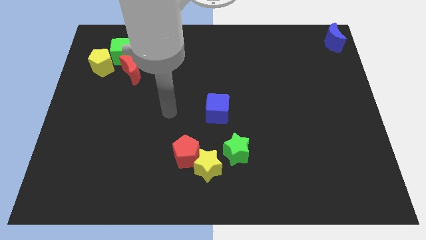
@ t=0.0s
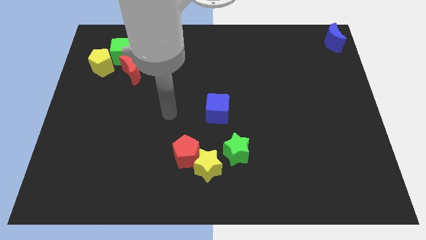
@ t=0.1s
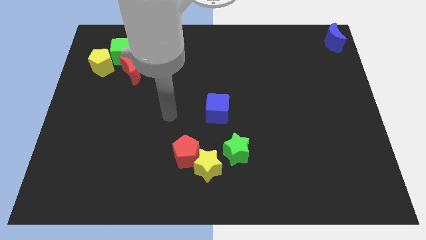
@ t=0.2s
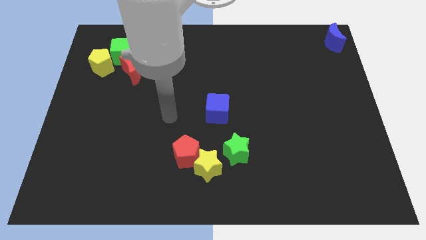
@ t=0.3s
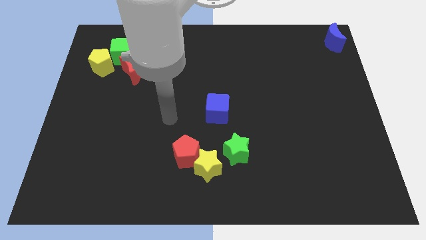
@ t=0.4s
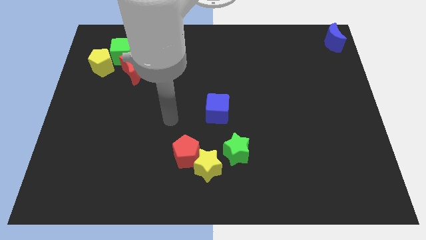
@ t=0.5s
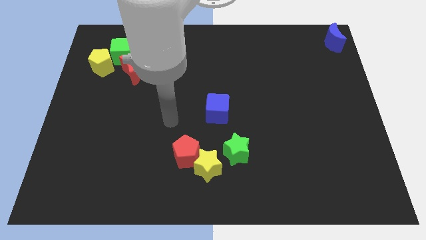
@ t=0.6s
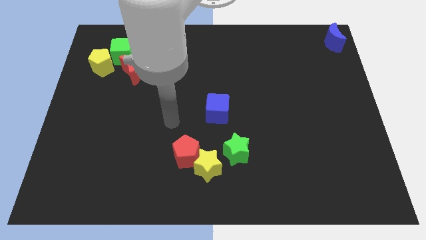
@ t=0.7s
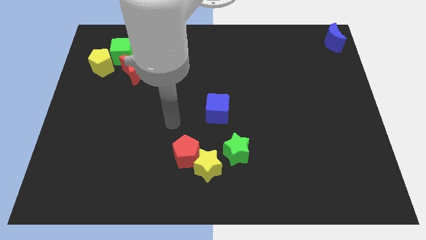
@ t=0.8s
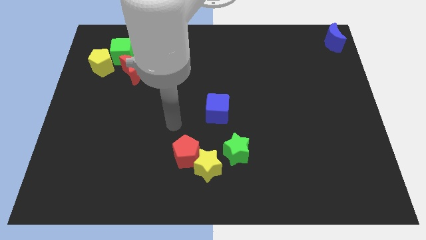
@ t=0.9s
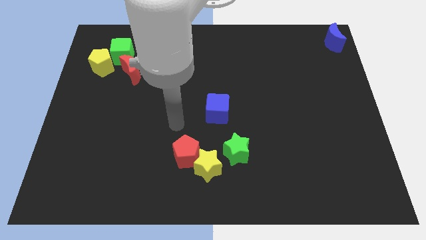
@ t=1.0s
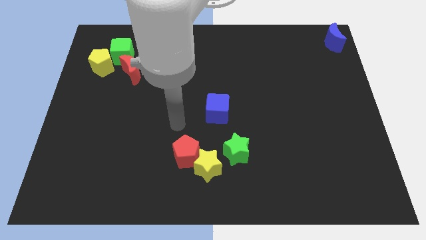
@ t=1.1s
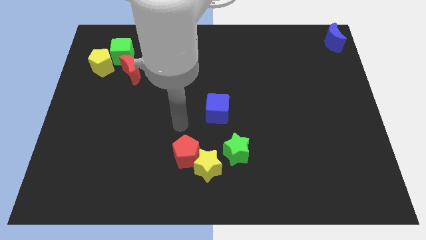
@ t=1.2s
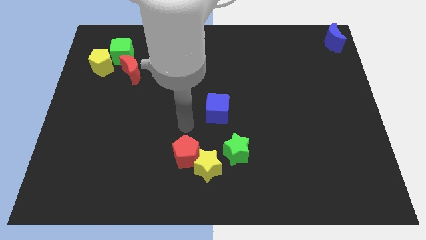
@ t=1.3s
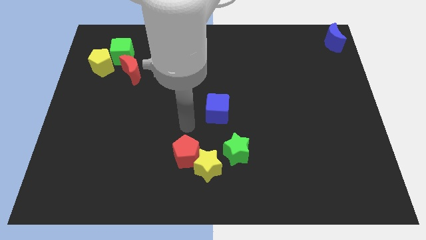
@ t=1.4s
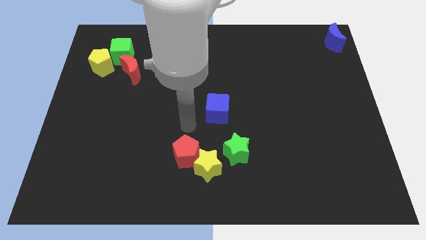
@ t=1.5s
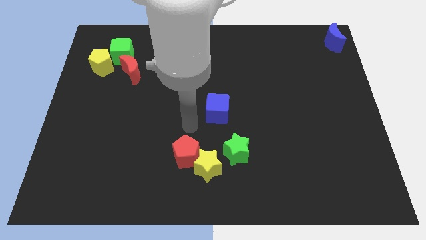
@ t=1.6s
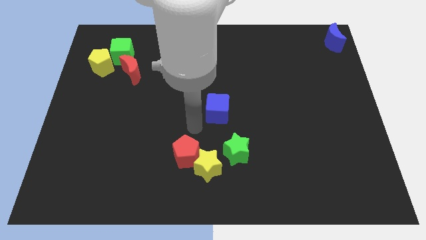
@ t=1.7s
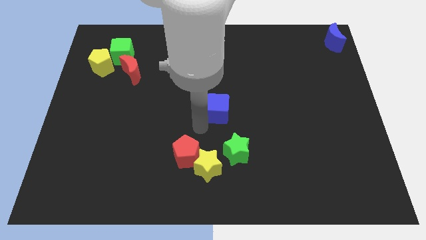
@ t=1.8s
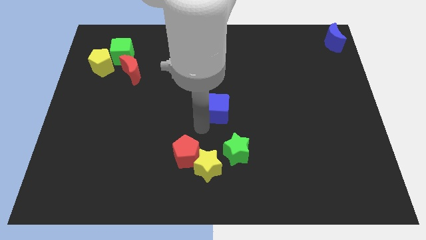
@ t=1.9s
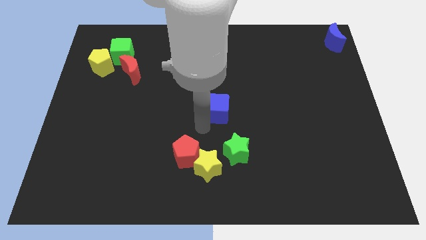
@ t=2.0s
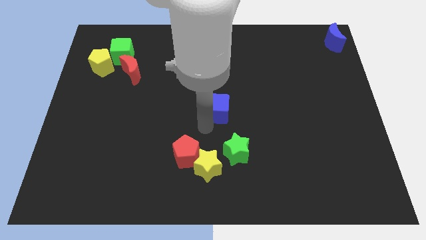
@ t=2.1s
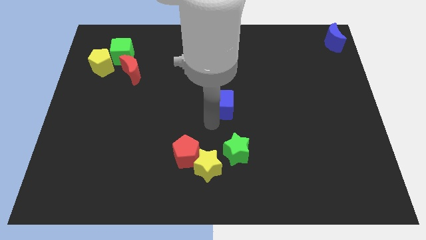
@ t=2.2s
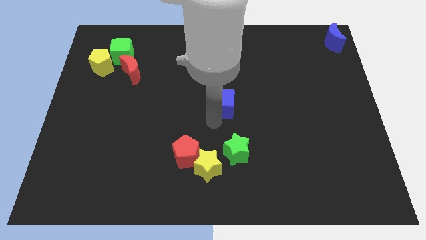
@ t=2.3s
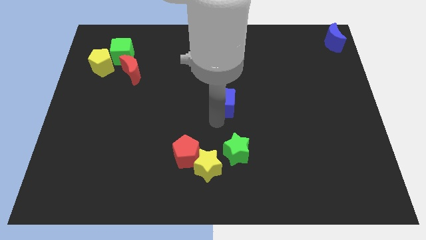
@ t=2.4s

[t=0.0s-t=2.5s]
tap the blue cube

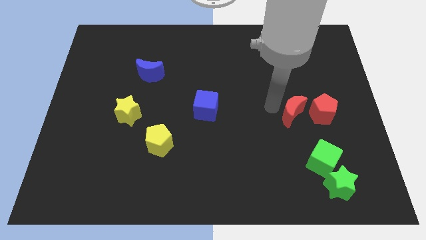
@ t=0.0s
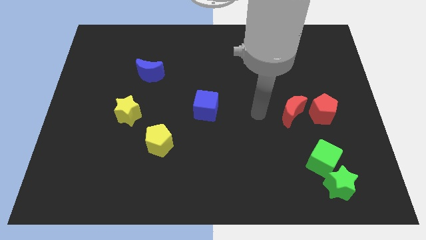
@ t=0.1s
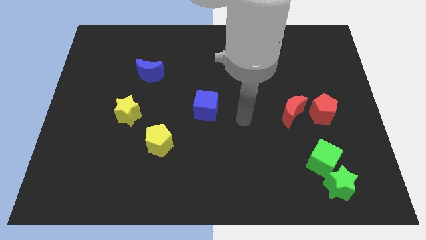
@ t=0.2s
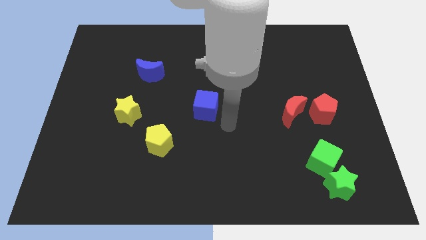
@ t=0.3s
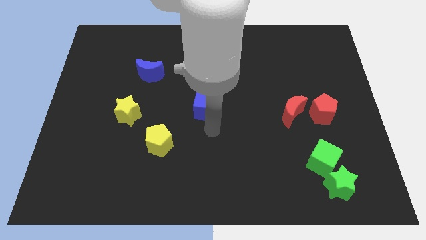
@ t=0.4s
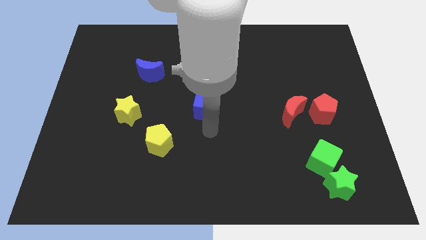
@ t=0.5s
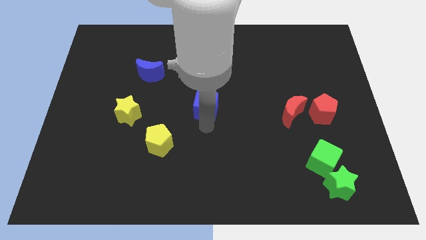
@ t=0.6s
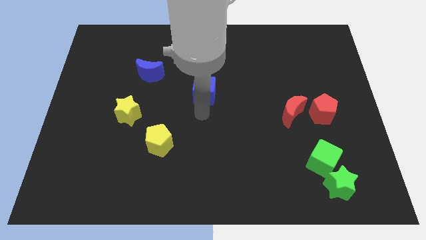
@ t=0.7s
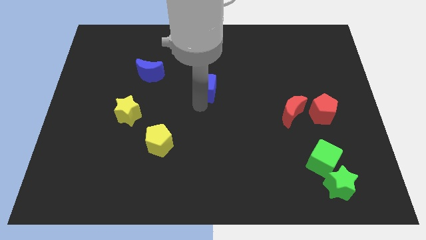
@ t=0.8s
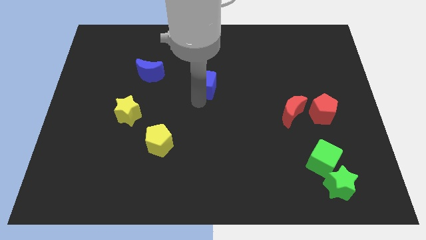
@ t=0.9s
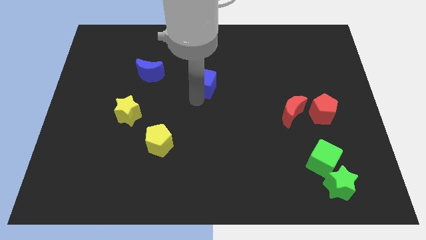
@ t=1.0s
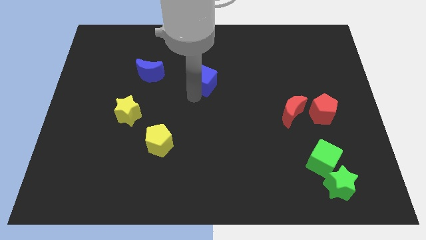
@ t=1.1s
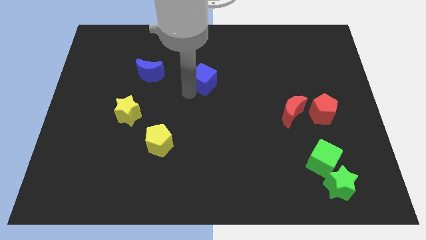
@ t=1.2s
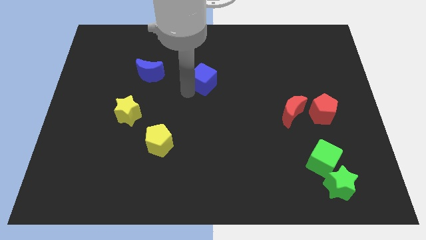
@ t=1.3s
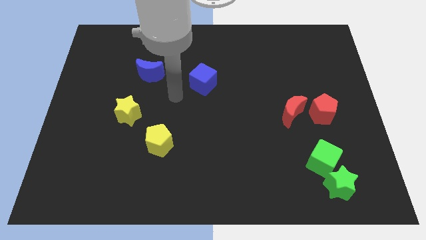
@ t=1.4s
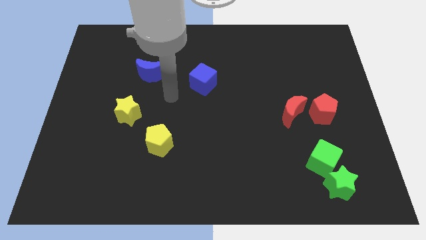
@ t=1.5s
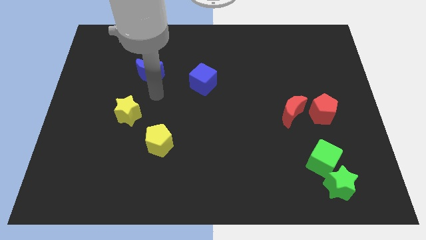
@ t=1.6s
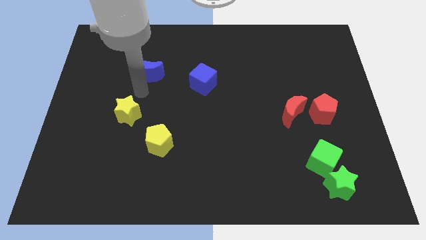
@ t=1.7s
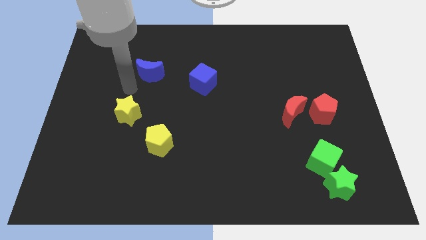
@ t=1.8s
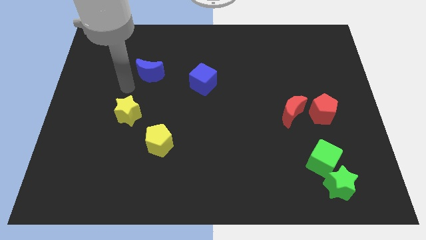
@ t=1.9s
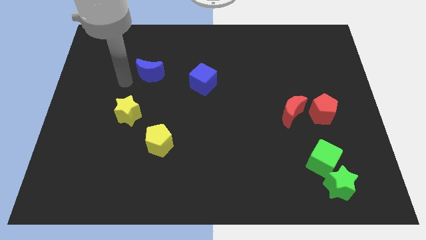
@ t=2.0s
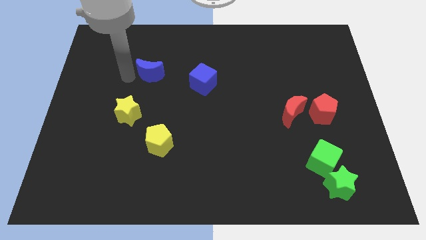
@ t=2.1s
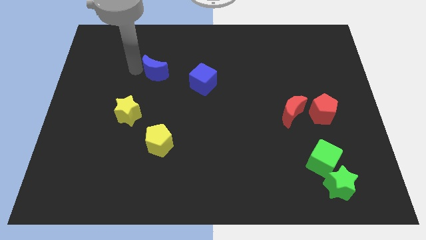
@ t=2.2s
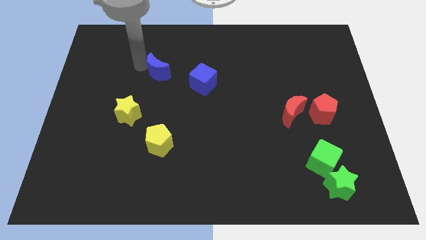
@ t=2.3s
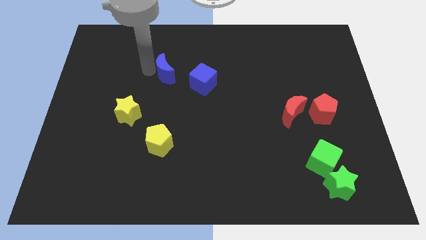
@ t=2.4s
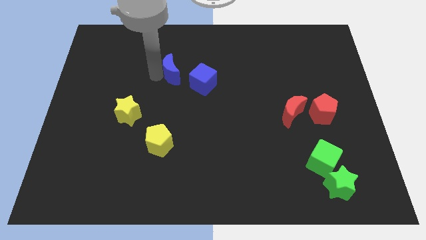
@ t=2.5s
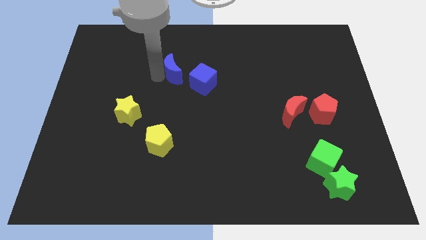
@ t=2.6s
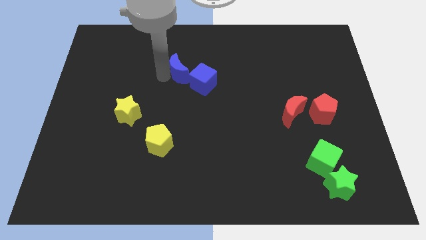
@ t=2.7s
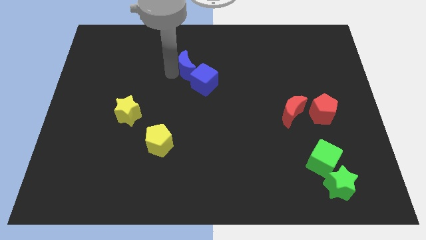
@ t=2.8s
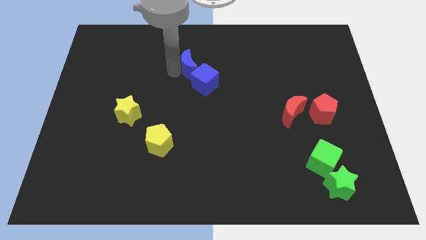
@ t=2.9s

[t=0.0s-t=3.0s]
move the blue cube diagonally to the top right side of the yellow pentagon

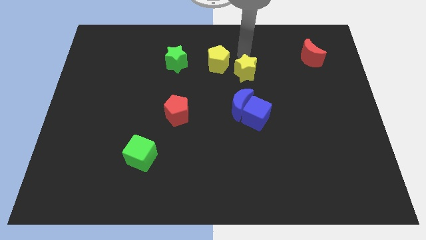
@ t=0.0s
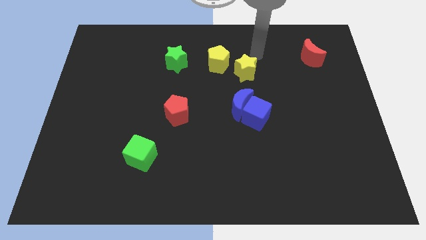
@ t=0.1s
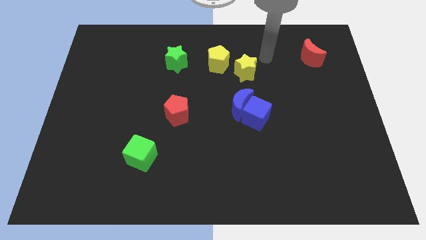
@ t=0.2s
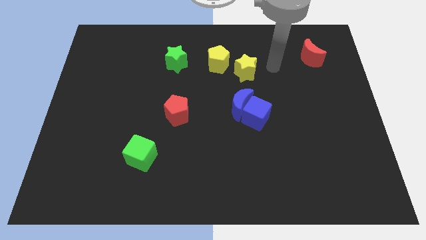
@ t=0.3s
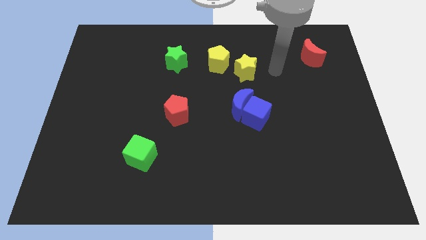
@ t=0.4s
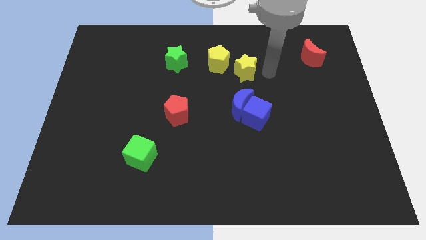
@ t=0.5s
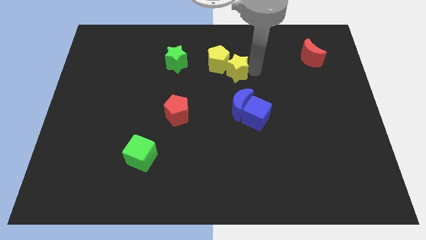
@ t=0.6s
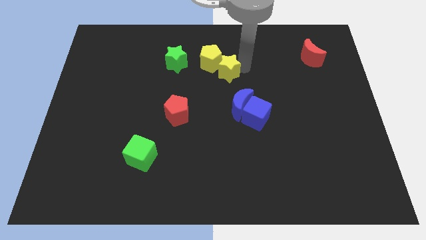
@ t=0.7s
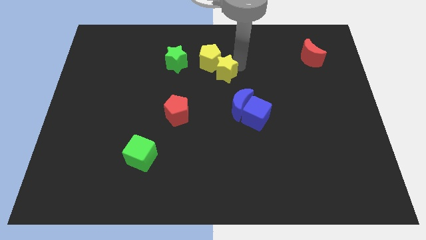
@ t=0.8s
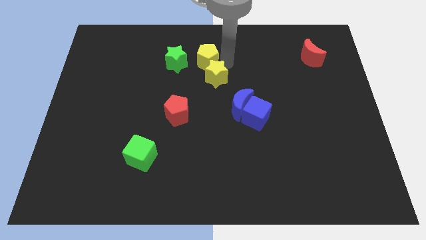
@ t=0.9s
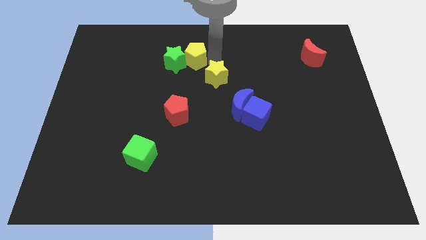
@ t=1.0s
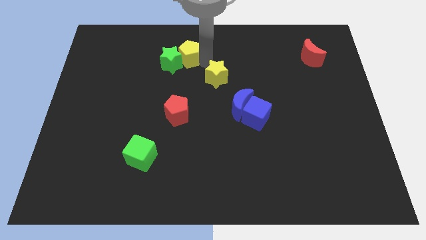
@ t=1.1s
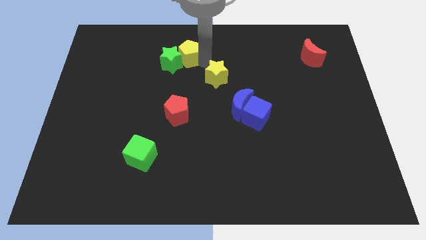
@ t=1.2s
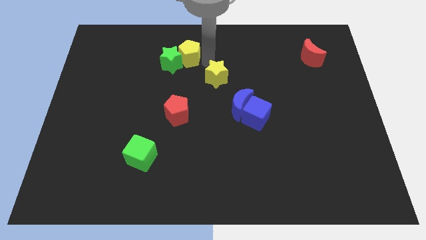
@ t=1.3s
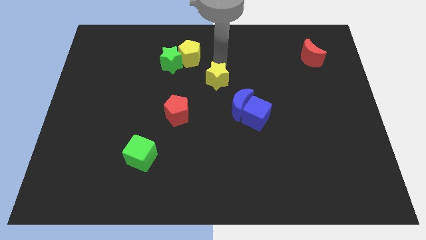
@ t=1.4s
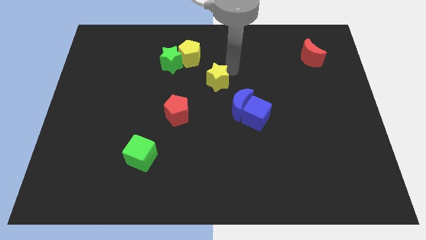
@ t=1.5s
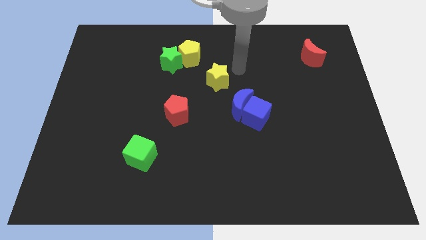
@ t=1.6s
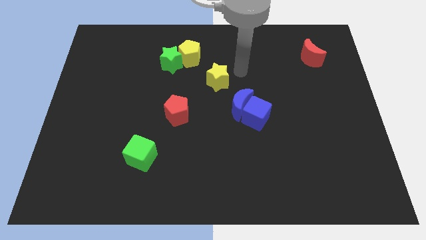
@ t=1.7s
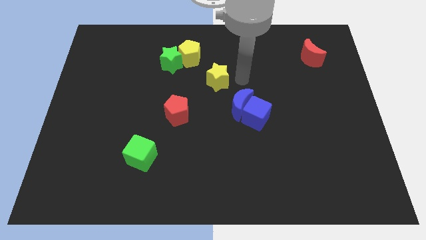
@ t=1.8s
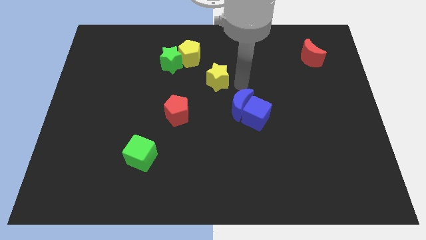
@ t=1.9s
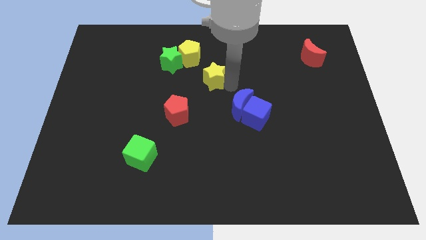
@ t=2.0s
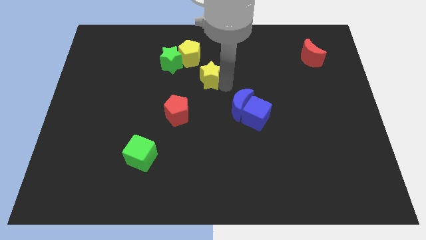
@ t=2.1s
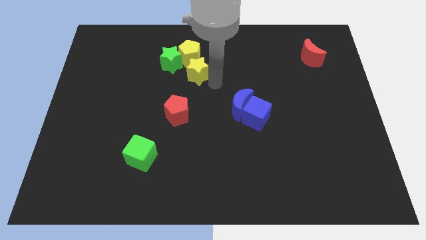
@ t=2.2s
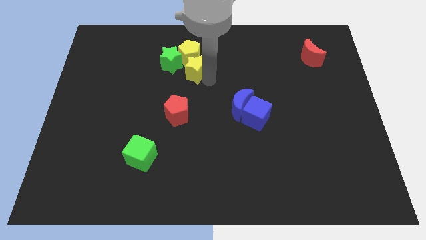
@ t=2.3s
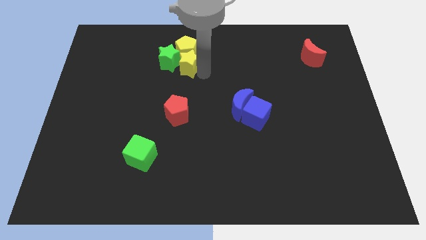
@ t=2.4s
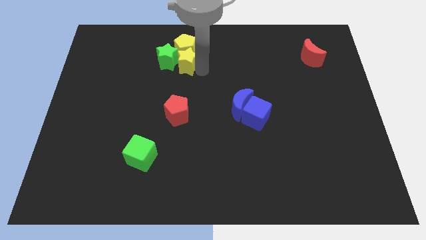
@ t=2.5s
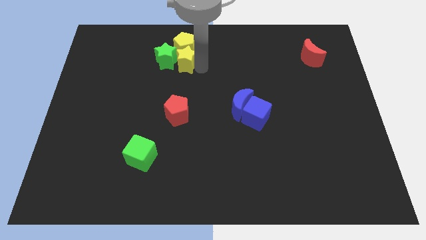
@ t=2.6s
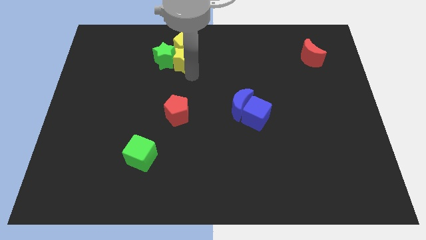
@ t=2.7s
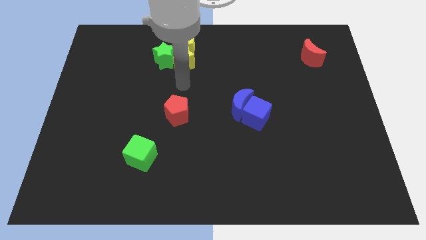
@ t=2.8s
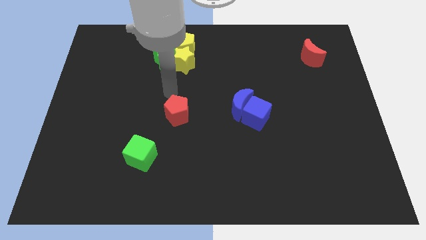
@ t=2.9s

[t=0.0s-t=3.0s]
place the yellow star below the yellow pentagon

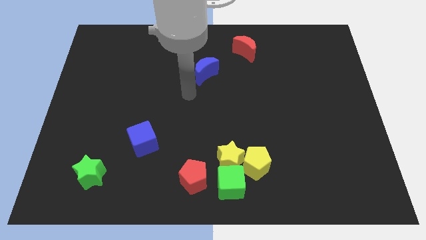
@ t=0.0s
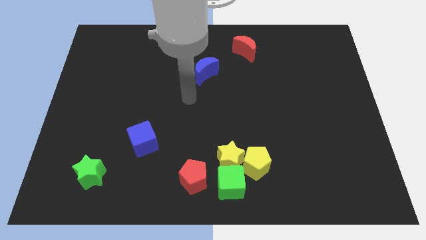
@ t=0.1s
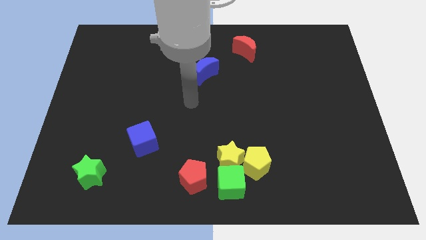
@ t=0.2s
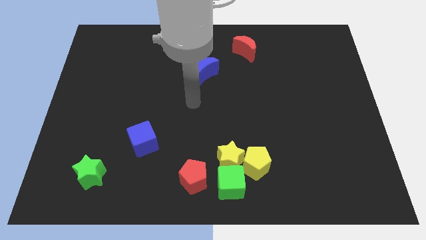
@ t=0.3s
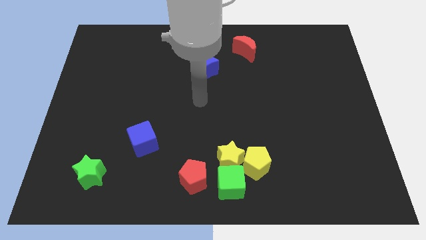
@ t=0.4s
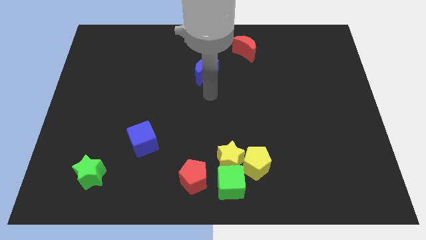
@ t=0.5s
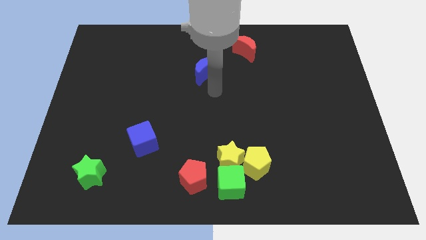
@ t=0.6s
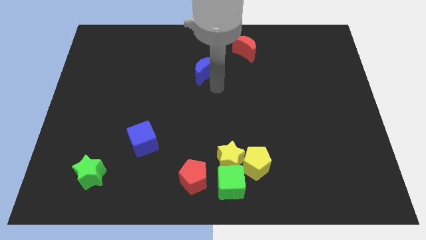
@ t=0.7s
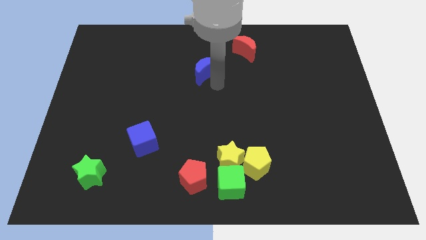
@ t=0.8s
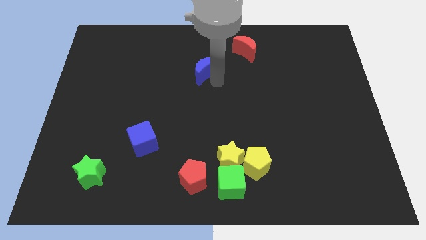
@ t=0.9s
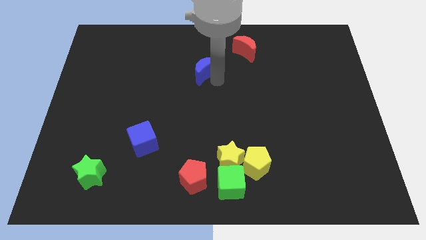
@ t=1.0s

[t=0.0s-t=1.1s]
point your arm at the bottom right side of blue crescent
